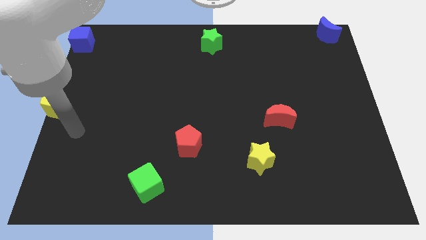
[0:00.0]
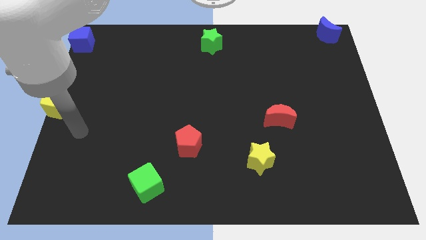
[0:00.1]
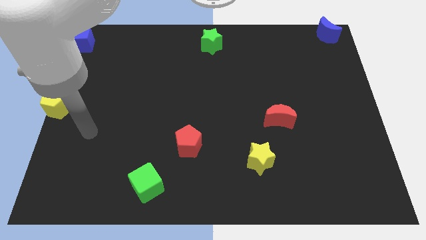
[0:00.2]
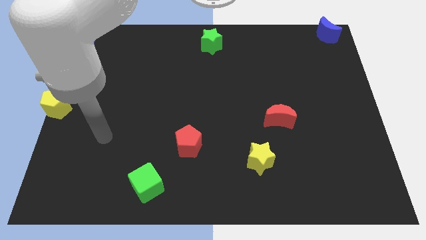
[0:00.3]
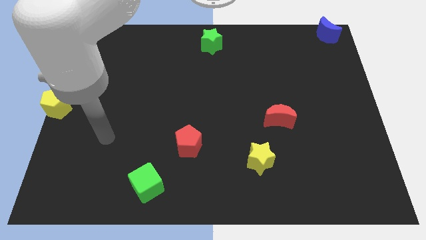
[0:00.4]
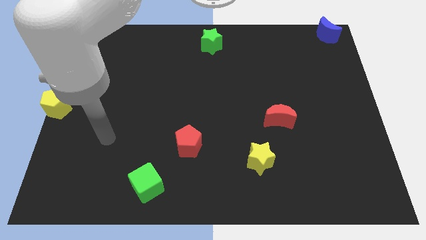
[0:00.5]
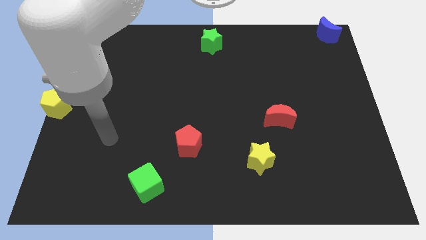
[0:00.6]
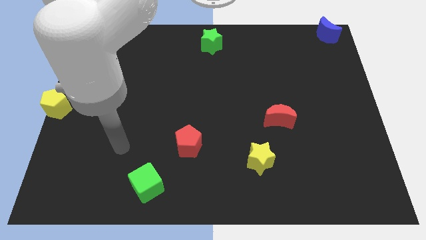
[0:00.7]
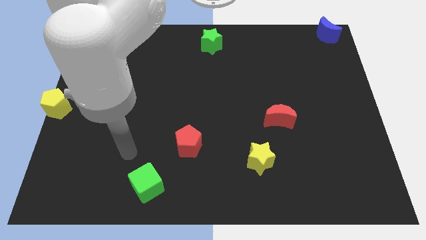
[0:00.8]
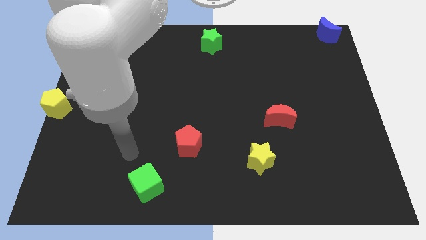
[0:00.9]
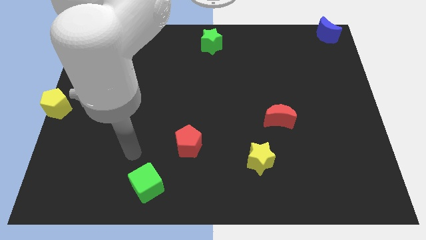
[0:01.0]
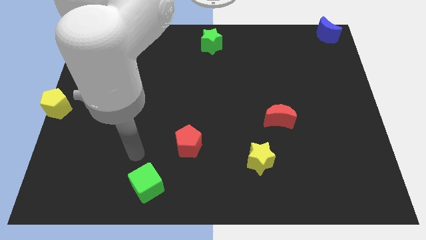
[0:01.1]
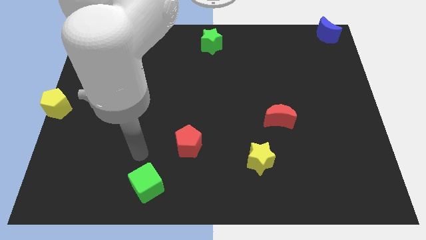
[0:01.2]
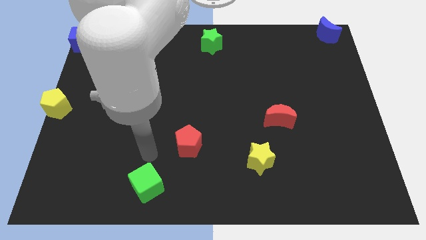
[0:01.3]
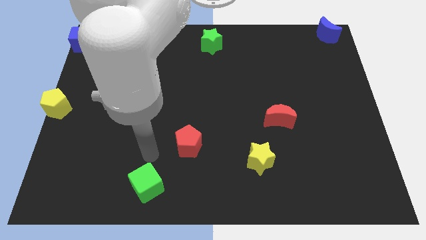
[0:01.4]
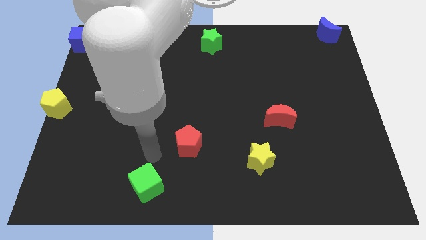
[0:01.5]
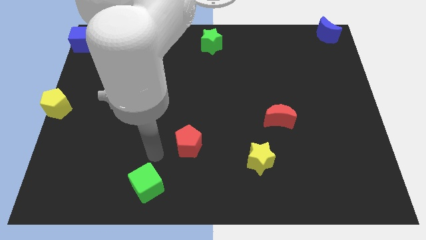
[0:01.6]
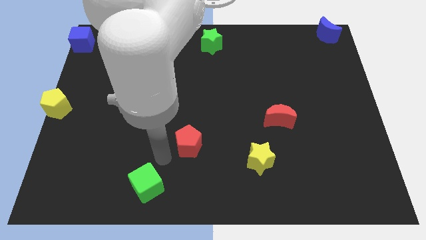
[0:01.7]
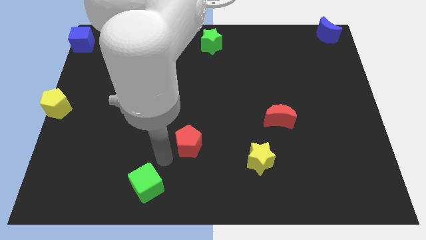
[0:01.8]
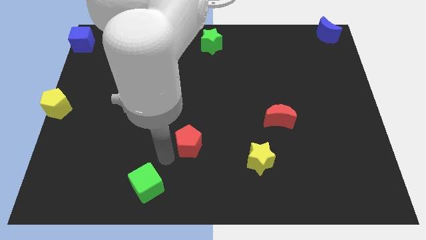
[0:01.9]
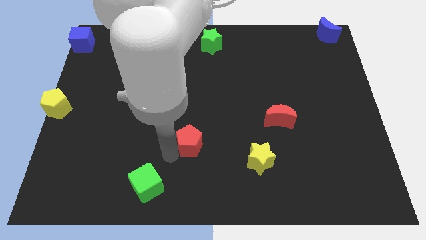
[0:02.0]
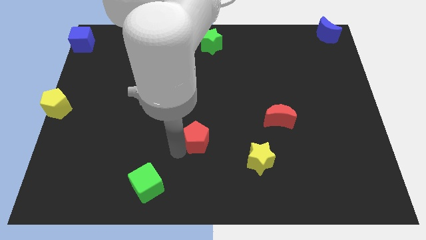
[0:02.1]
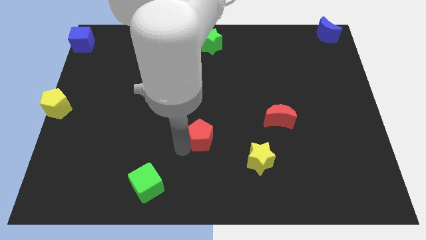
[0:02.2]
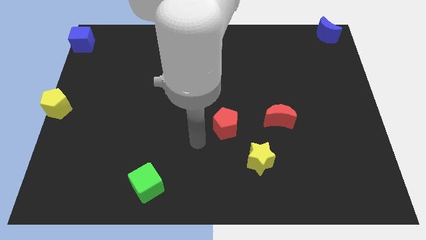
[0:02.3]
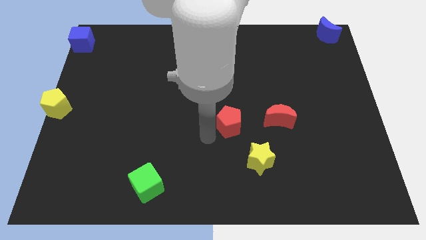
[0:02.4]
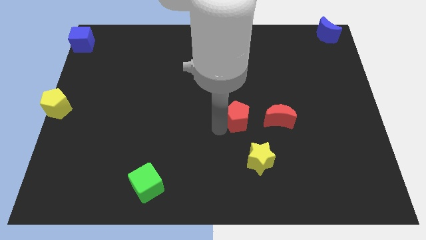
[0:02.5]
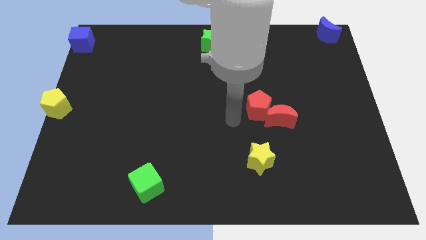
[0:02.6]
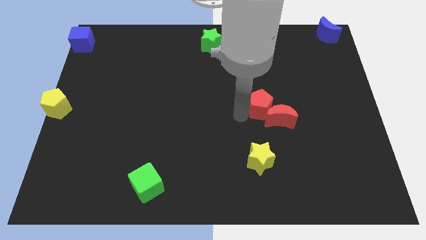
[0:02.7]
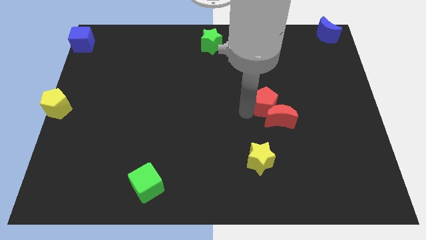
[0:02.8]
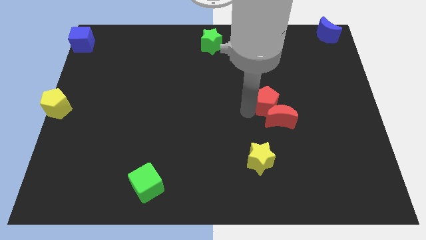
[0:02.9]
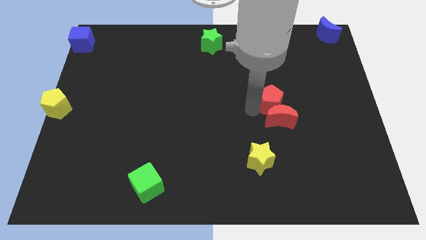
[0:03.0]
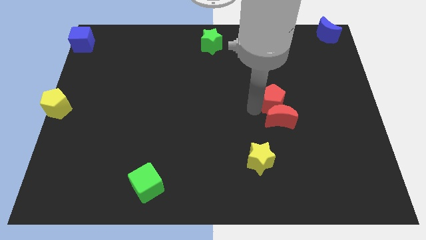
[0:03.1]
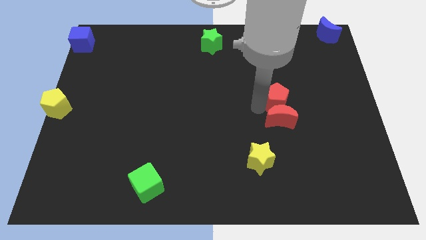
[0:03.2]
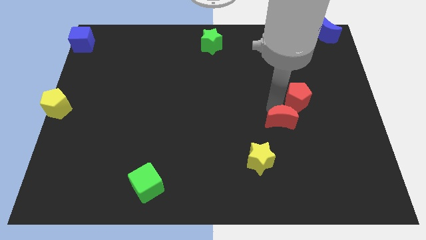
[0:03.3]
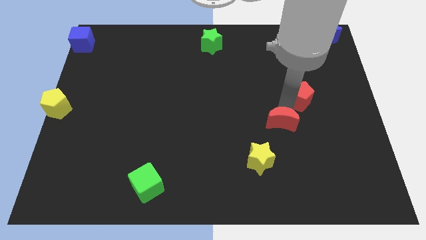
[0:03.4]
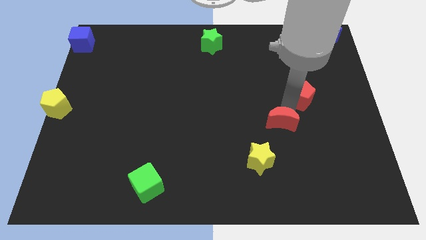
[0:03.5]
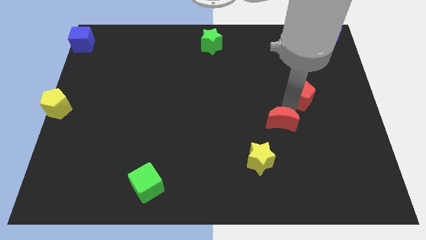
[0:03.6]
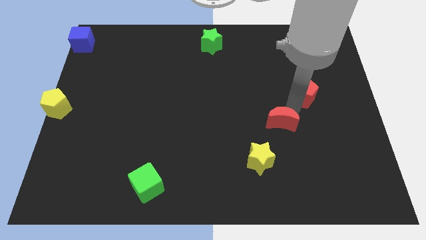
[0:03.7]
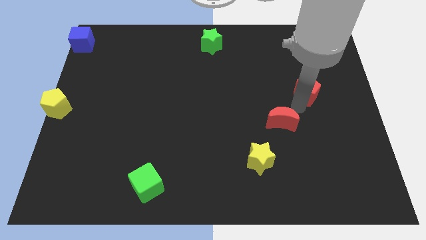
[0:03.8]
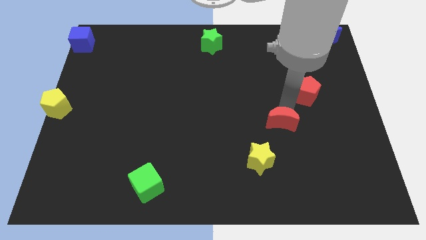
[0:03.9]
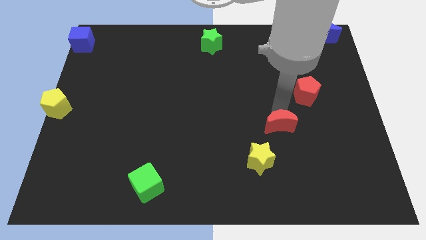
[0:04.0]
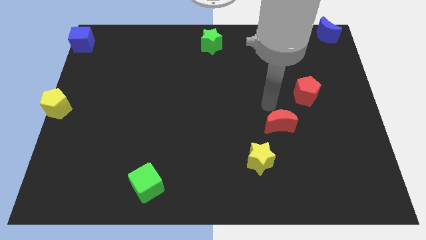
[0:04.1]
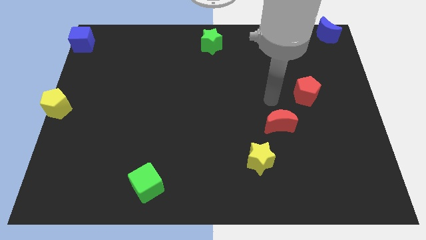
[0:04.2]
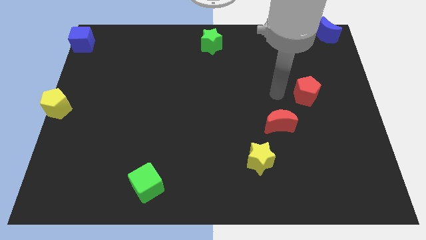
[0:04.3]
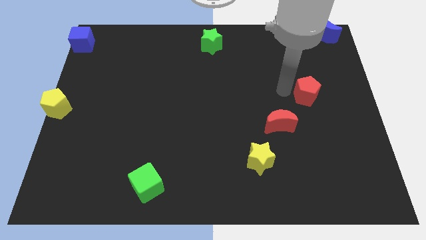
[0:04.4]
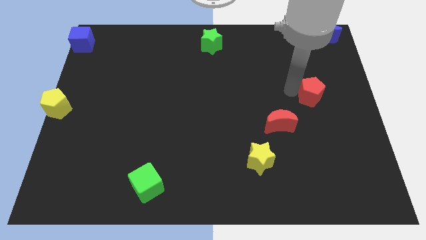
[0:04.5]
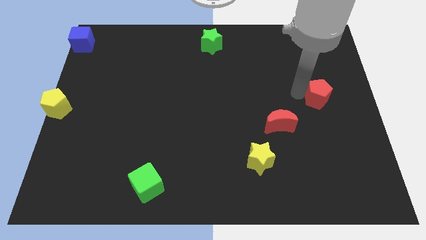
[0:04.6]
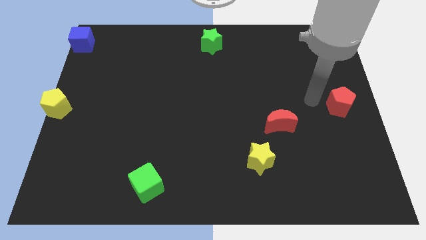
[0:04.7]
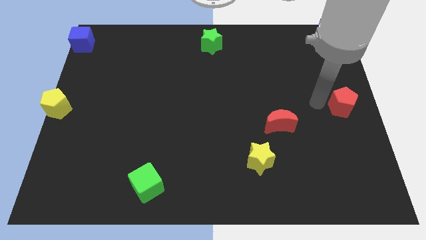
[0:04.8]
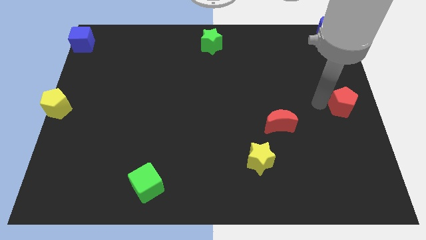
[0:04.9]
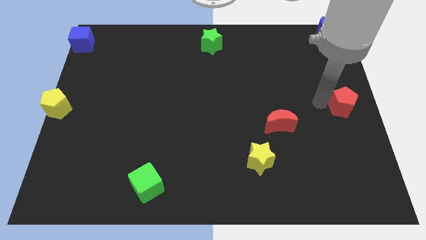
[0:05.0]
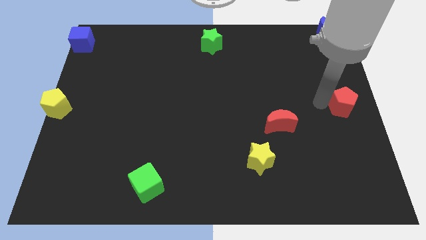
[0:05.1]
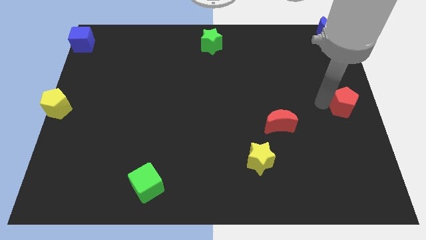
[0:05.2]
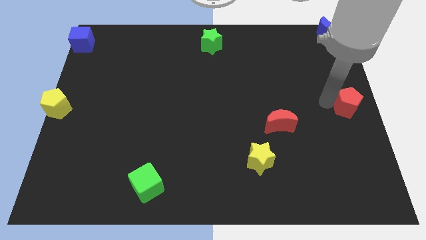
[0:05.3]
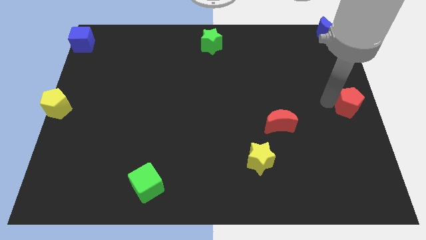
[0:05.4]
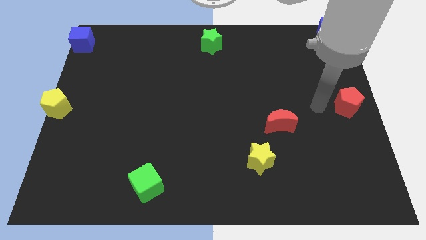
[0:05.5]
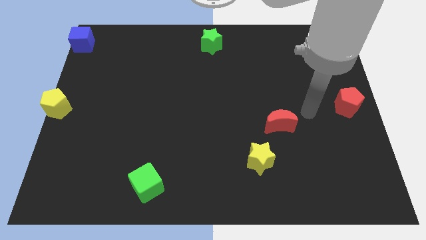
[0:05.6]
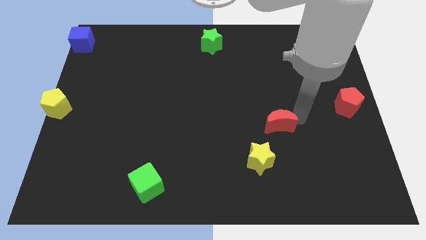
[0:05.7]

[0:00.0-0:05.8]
move the red pentagon to the right center of the board

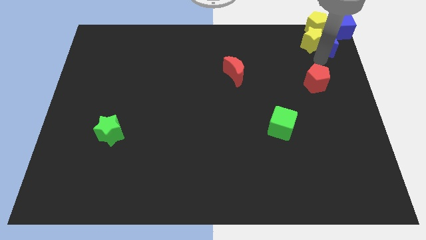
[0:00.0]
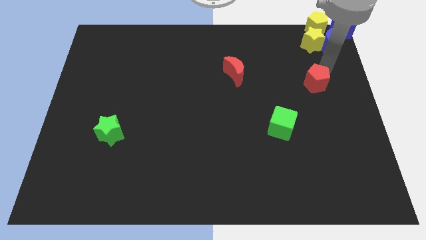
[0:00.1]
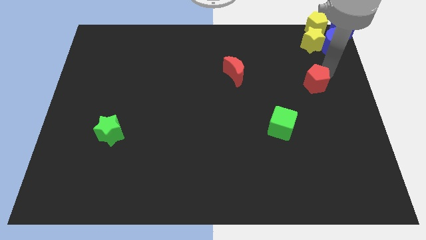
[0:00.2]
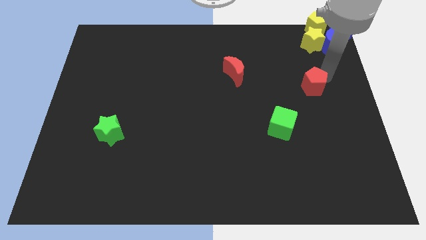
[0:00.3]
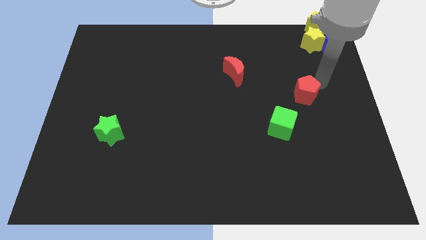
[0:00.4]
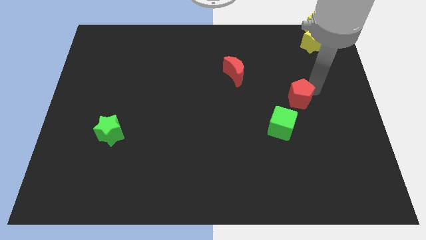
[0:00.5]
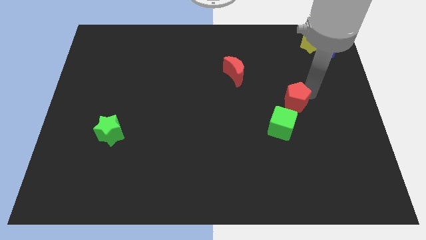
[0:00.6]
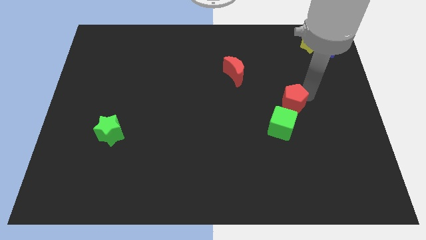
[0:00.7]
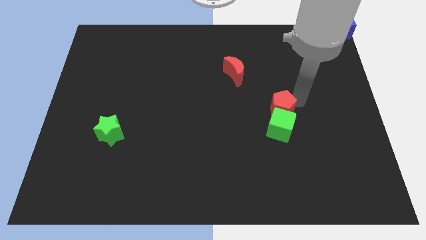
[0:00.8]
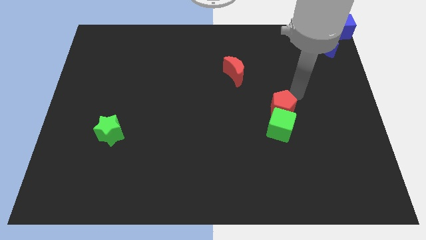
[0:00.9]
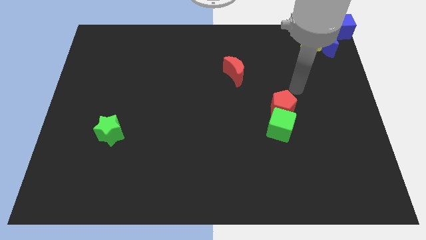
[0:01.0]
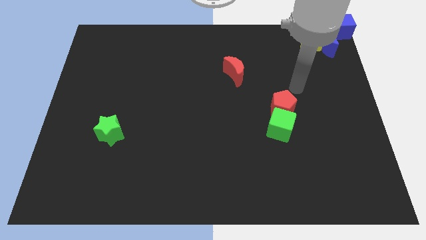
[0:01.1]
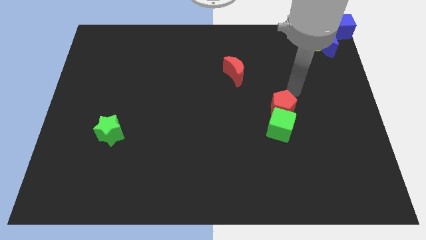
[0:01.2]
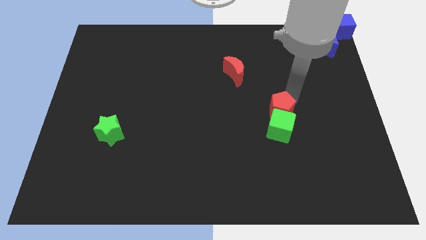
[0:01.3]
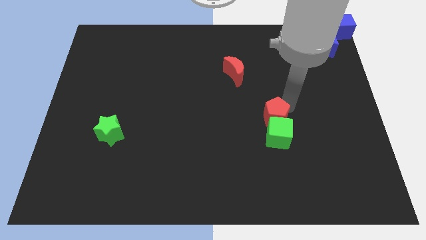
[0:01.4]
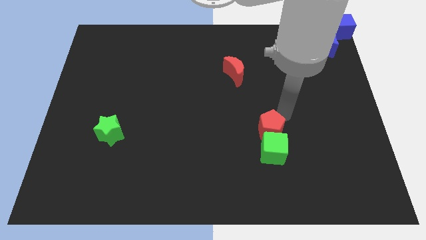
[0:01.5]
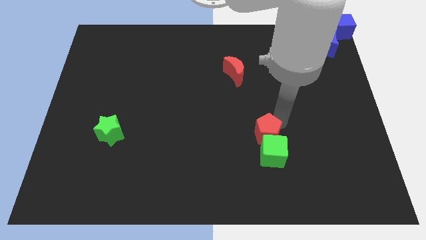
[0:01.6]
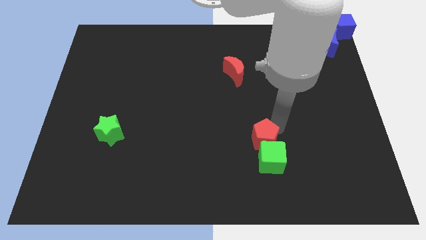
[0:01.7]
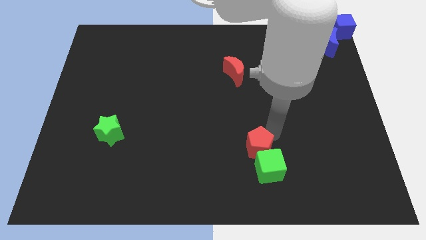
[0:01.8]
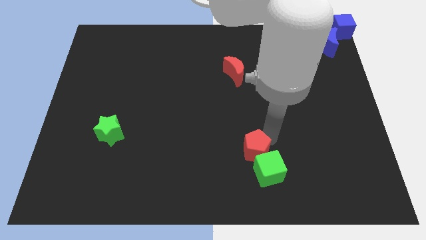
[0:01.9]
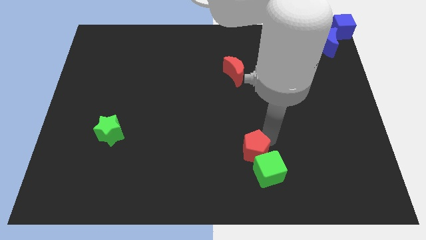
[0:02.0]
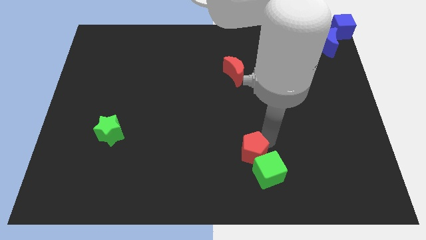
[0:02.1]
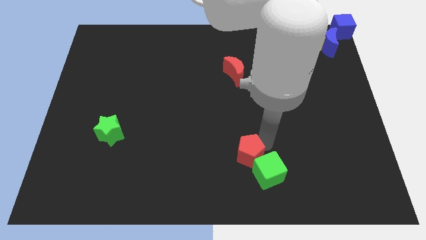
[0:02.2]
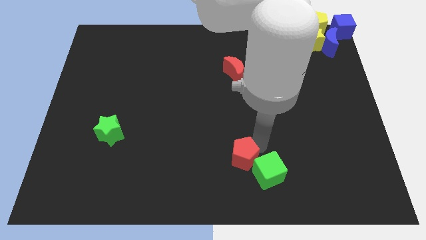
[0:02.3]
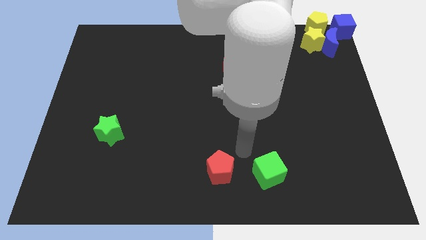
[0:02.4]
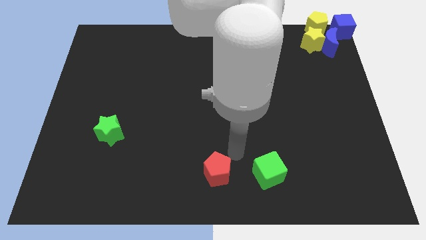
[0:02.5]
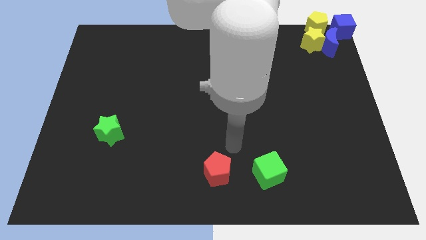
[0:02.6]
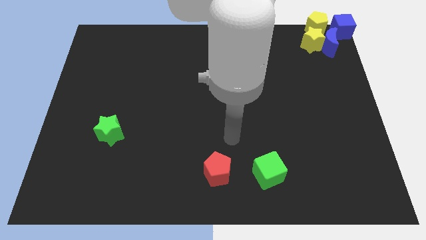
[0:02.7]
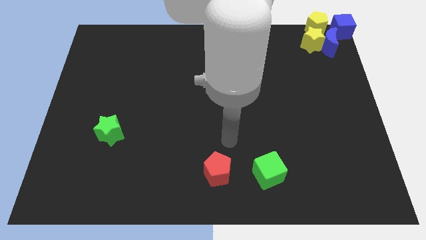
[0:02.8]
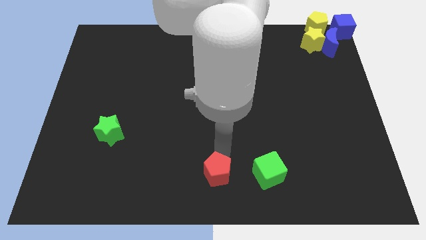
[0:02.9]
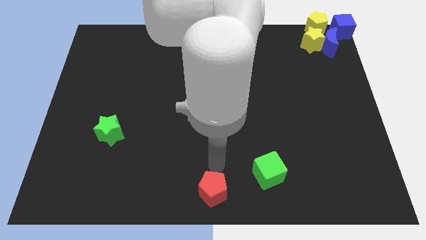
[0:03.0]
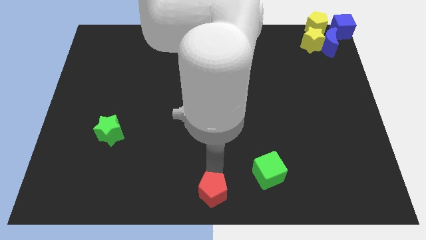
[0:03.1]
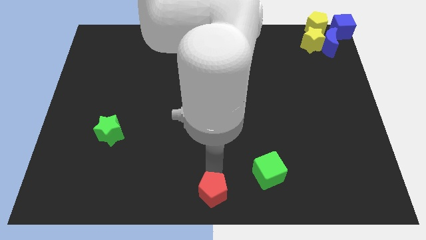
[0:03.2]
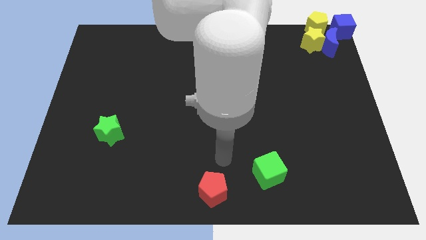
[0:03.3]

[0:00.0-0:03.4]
put the red pentagon at the bottom center of the board
